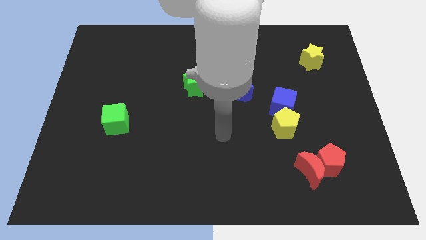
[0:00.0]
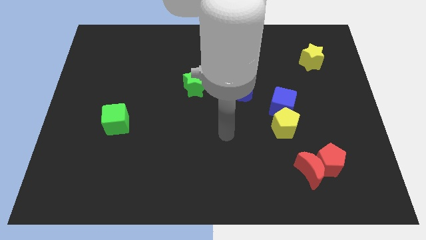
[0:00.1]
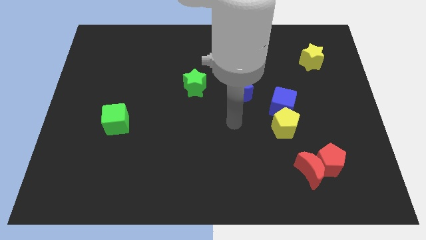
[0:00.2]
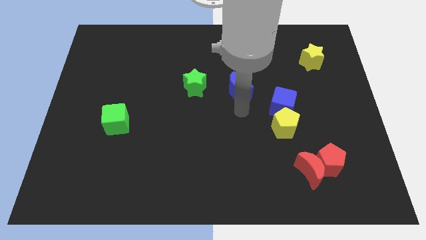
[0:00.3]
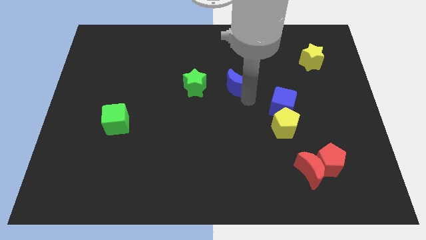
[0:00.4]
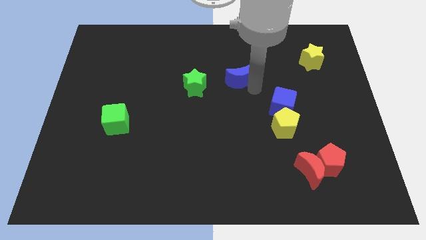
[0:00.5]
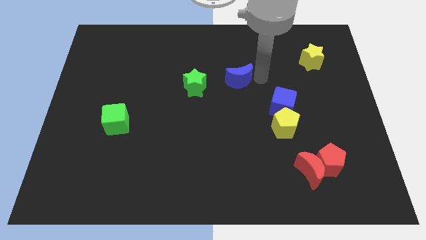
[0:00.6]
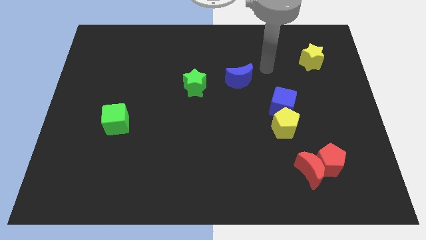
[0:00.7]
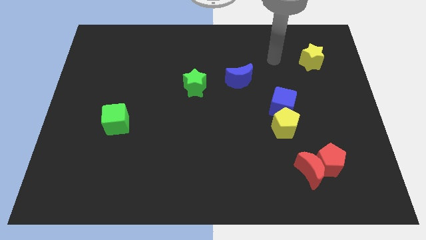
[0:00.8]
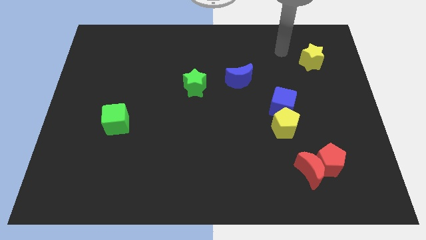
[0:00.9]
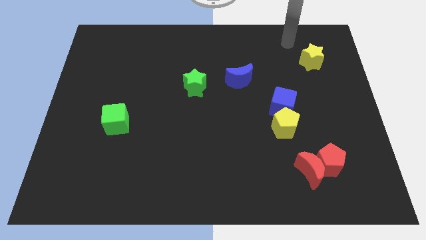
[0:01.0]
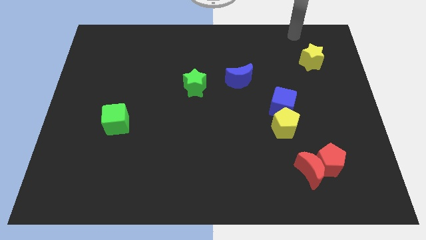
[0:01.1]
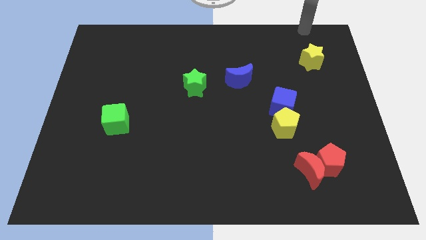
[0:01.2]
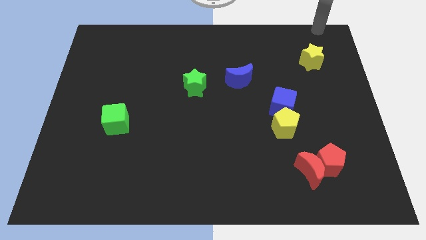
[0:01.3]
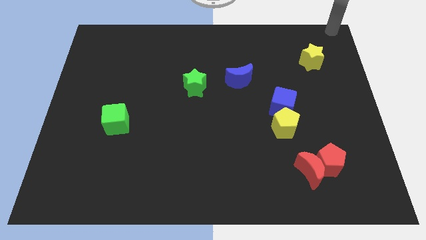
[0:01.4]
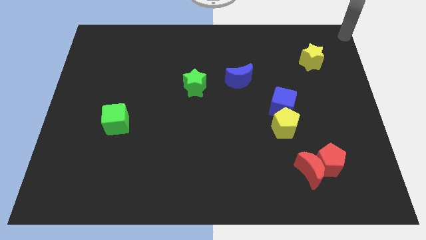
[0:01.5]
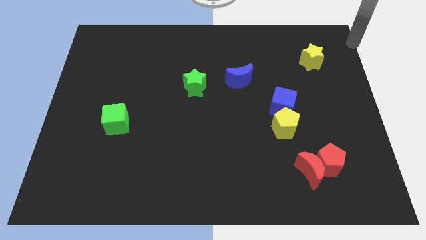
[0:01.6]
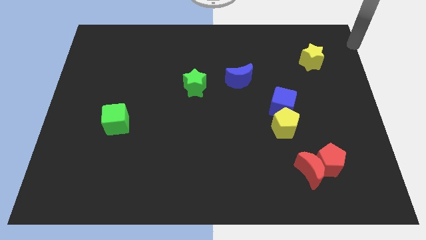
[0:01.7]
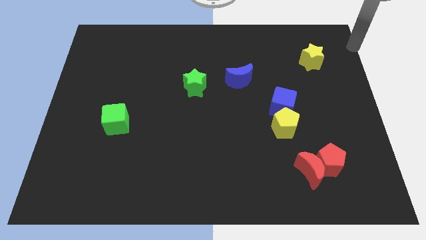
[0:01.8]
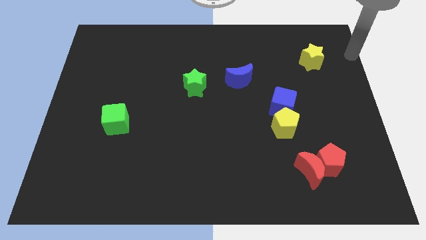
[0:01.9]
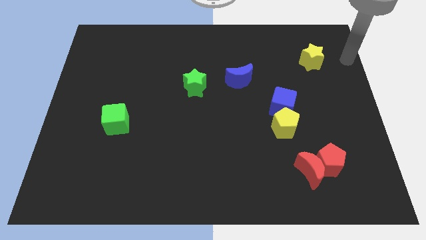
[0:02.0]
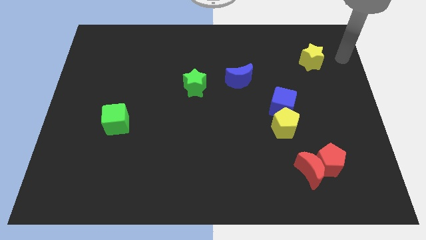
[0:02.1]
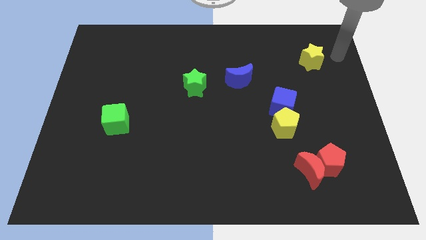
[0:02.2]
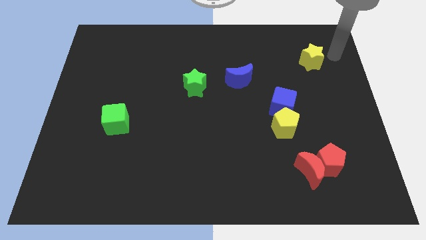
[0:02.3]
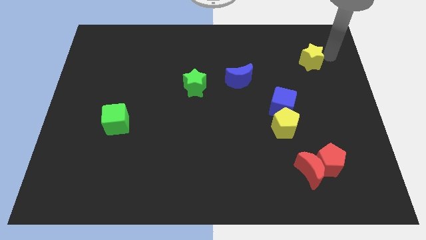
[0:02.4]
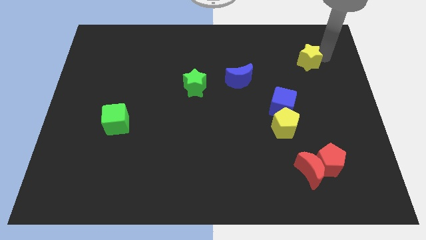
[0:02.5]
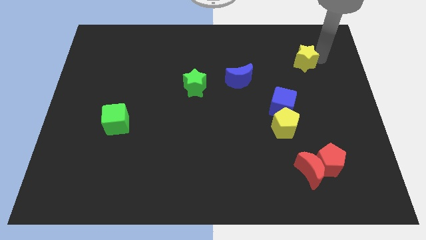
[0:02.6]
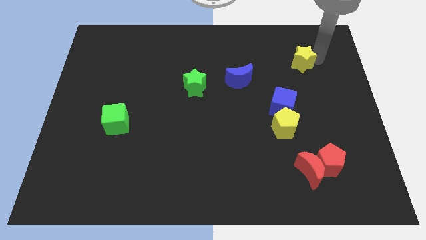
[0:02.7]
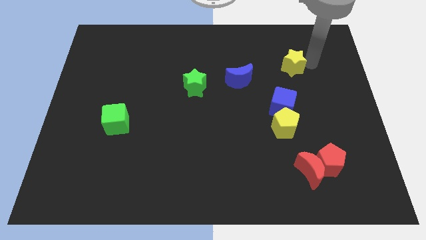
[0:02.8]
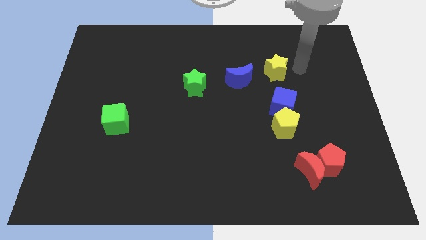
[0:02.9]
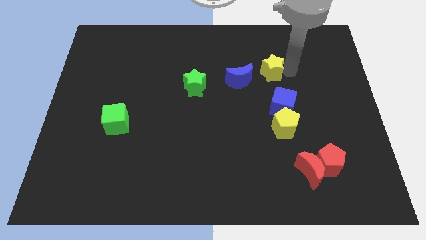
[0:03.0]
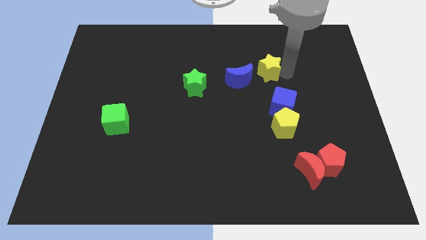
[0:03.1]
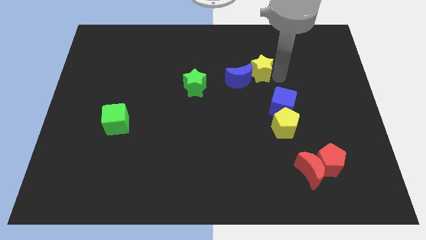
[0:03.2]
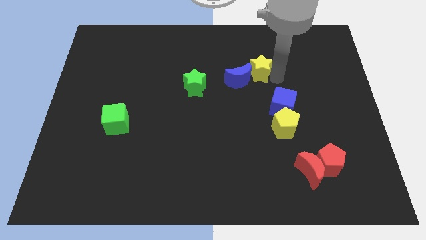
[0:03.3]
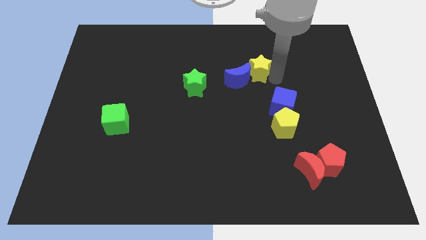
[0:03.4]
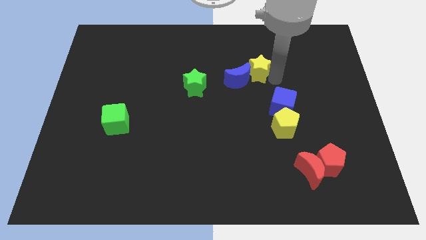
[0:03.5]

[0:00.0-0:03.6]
go and push the yellow star in to the blue moon

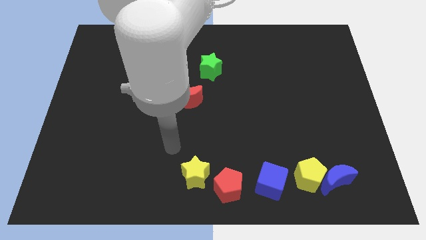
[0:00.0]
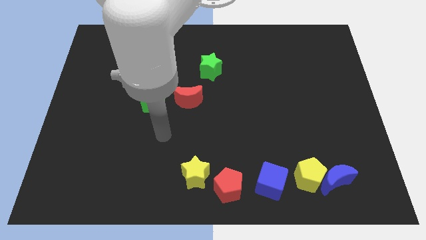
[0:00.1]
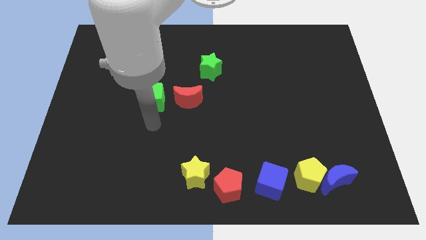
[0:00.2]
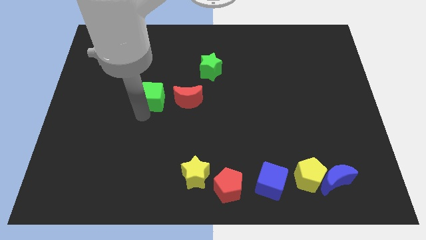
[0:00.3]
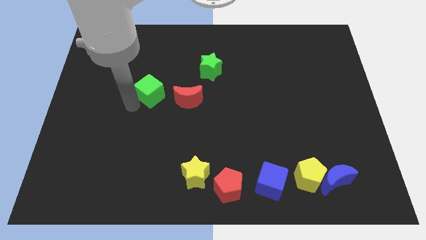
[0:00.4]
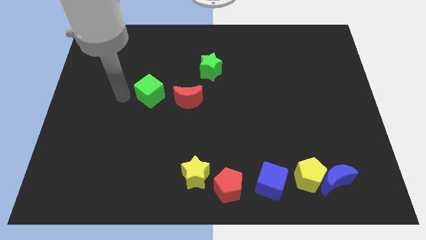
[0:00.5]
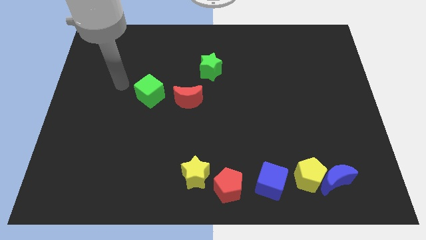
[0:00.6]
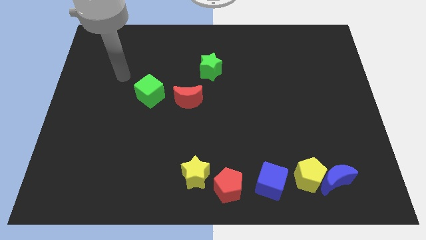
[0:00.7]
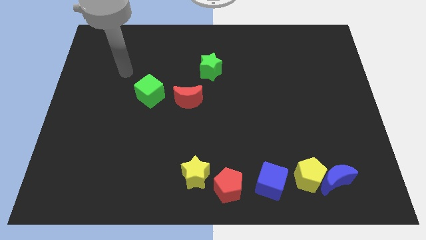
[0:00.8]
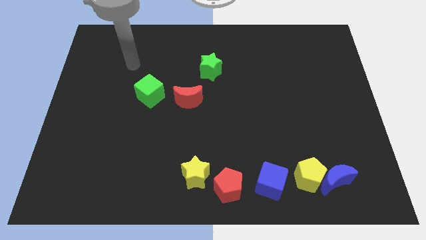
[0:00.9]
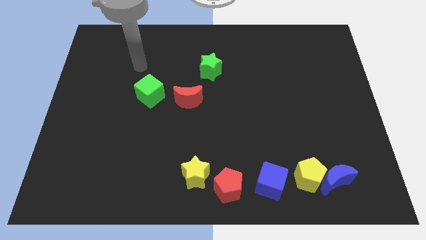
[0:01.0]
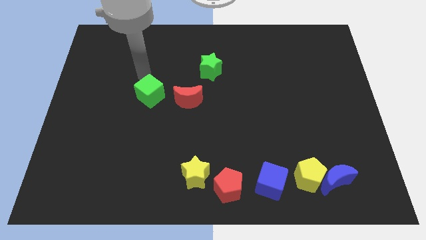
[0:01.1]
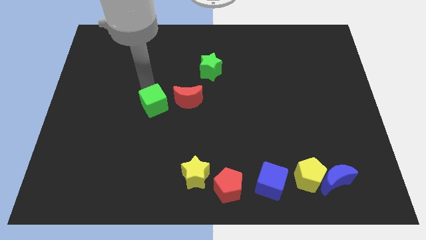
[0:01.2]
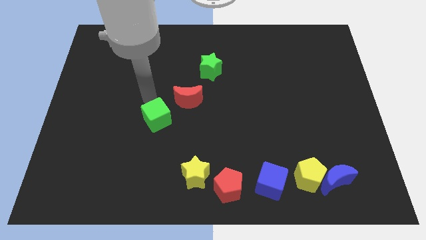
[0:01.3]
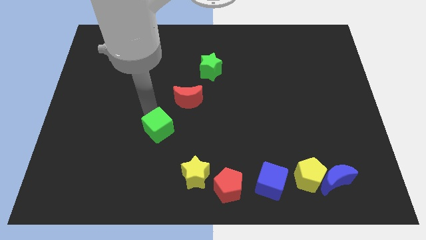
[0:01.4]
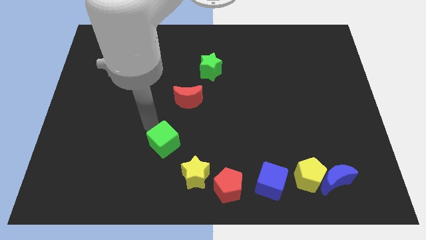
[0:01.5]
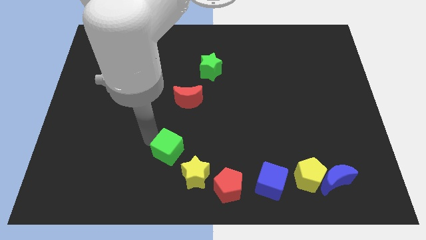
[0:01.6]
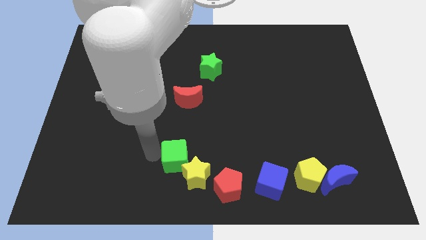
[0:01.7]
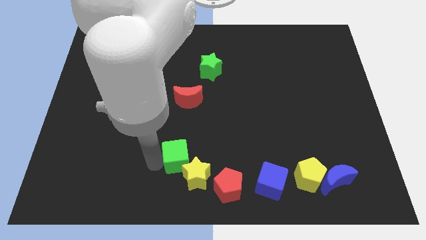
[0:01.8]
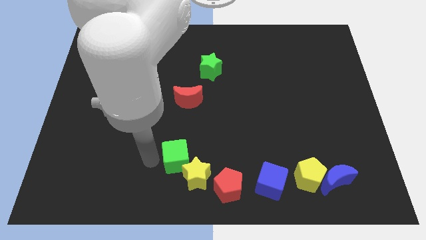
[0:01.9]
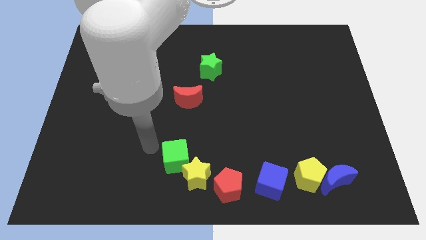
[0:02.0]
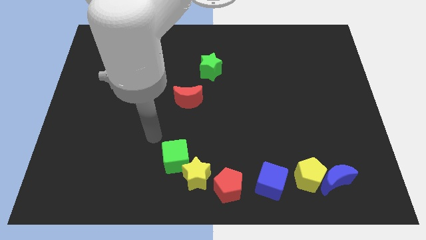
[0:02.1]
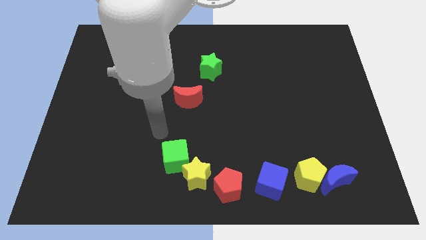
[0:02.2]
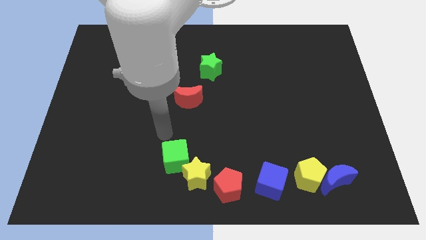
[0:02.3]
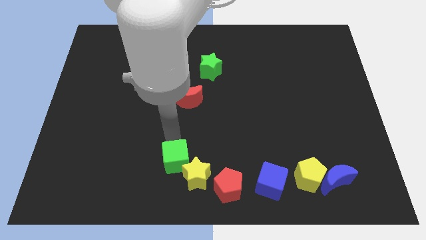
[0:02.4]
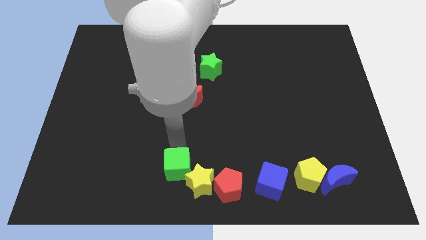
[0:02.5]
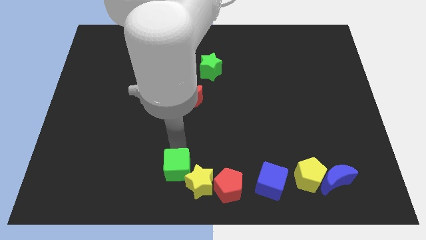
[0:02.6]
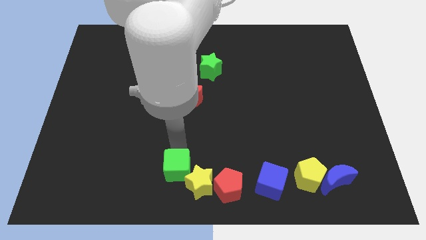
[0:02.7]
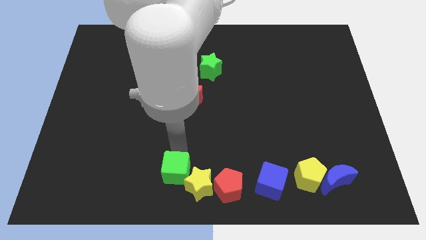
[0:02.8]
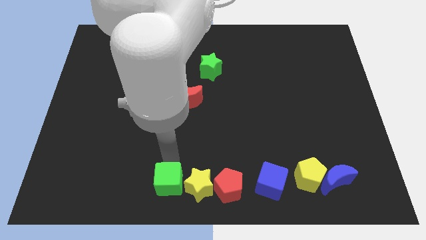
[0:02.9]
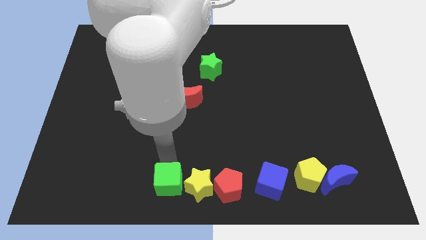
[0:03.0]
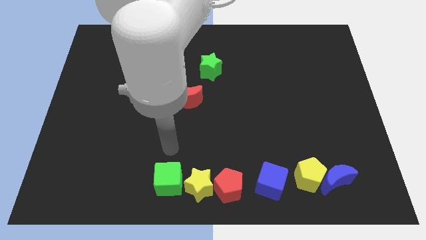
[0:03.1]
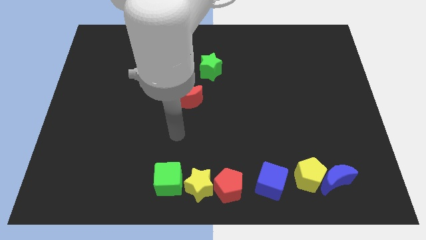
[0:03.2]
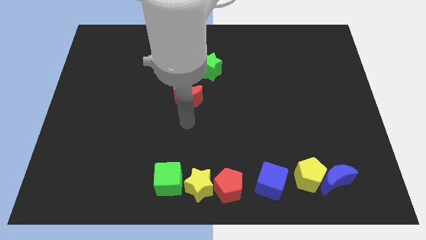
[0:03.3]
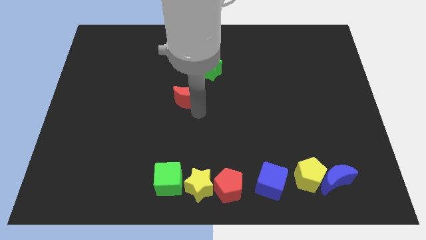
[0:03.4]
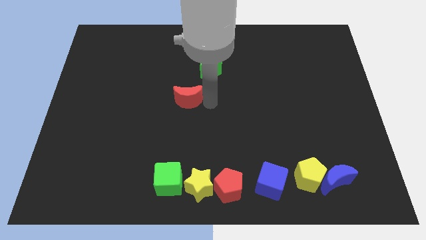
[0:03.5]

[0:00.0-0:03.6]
place the green cube left to the yellow star

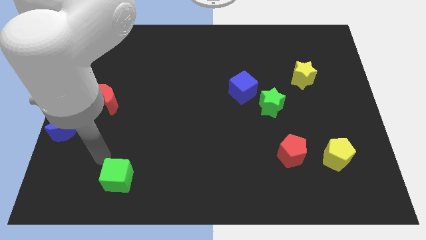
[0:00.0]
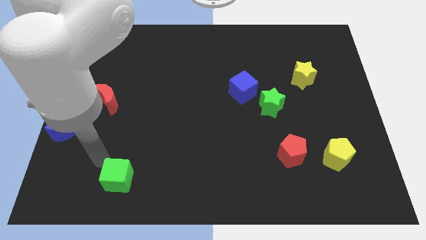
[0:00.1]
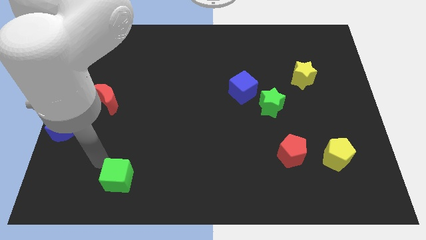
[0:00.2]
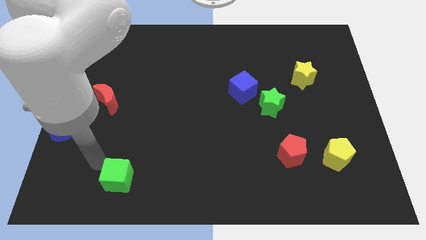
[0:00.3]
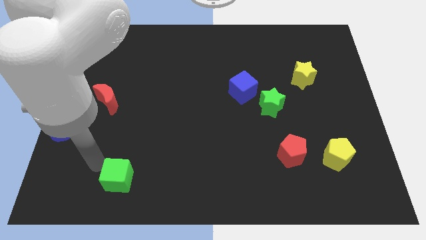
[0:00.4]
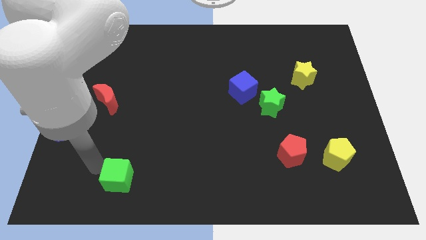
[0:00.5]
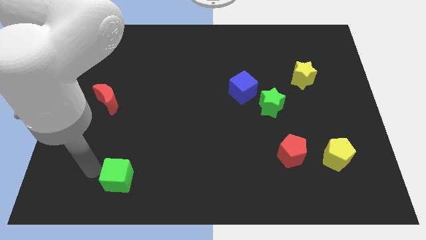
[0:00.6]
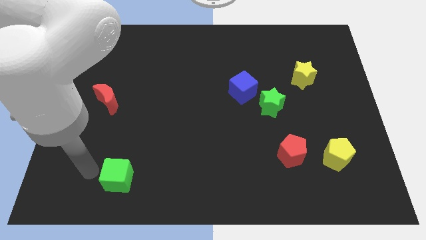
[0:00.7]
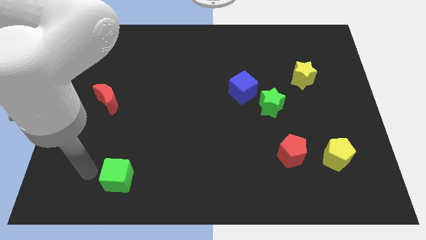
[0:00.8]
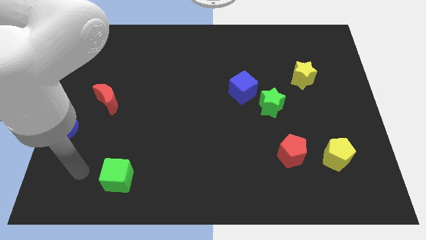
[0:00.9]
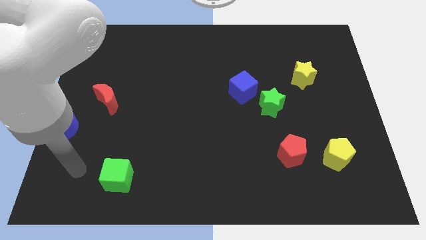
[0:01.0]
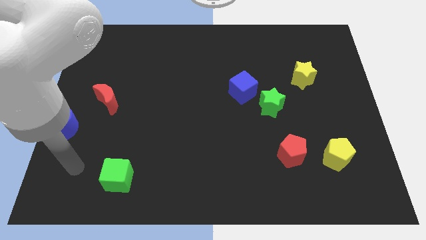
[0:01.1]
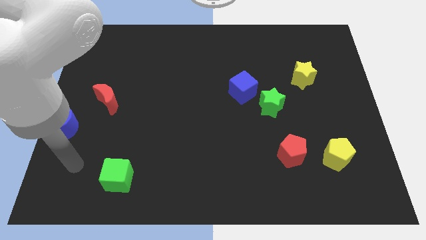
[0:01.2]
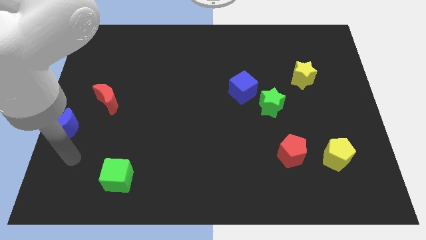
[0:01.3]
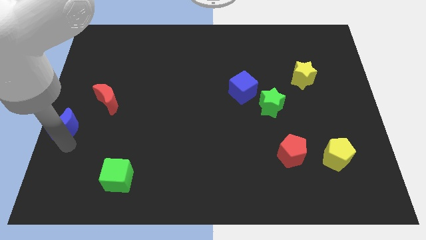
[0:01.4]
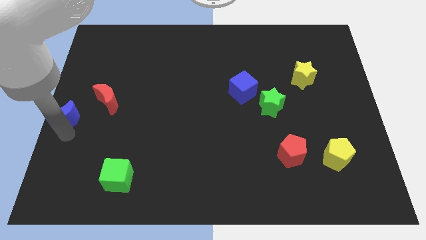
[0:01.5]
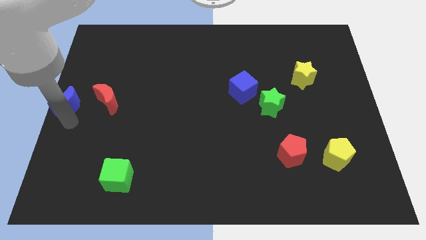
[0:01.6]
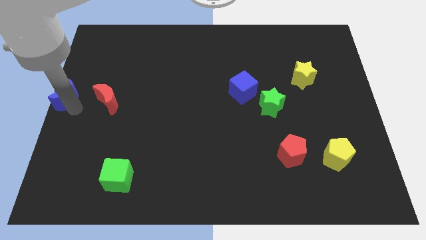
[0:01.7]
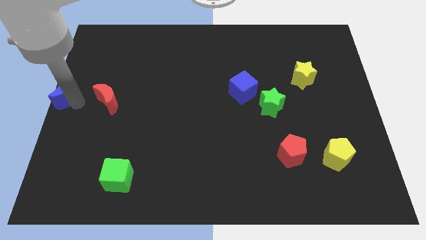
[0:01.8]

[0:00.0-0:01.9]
push the blue moon parallel left to the red moon
